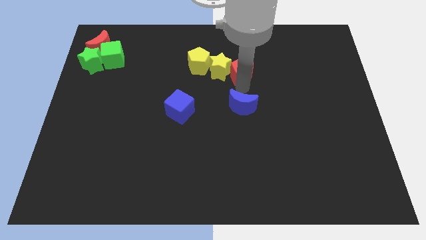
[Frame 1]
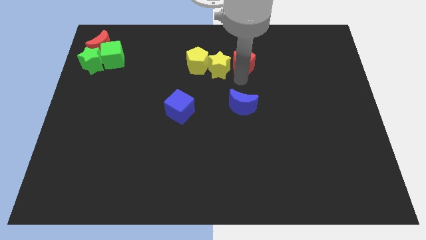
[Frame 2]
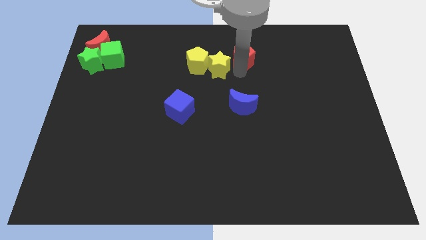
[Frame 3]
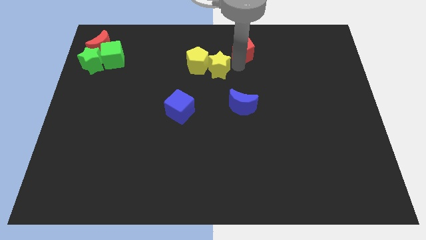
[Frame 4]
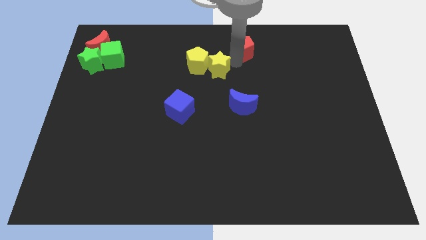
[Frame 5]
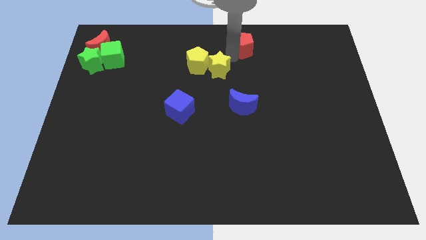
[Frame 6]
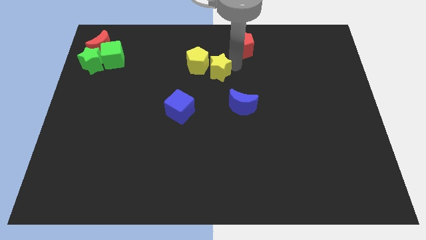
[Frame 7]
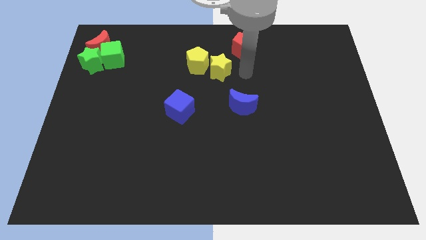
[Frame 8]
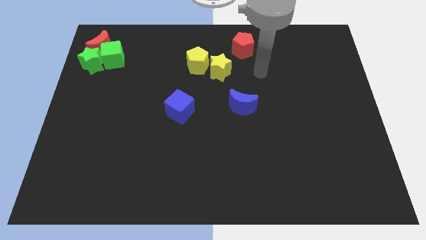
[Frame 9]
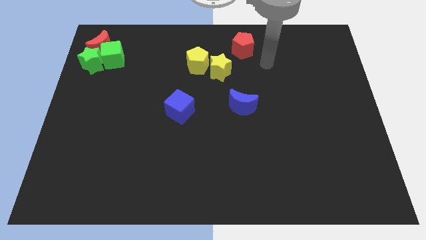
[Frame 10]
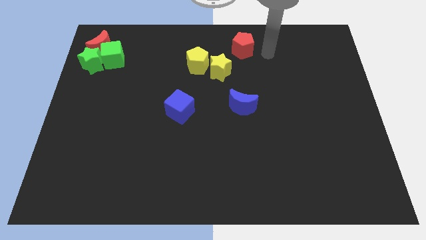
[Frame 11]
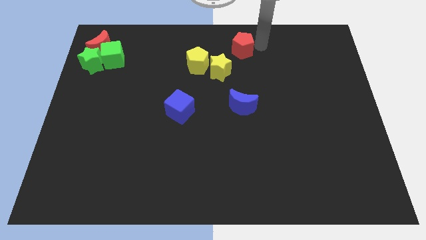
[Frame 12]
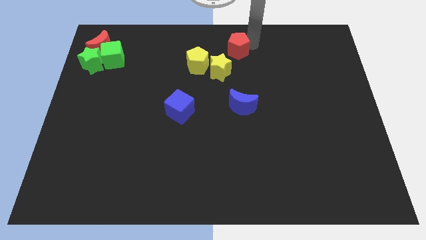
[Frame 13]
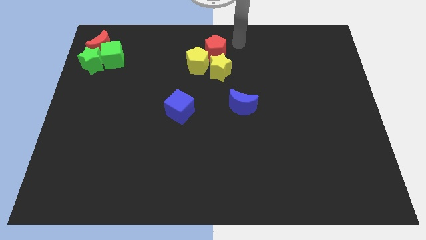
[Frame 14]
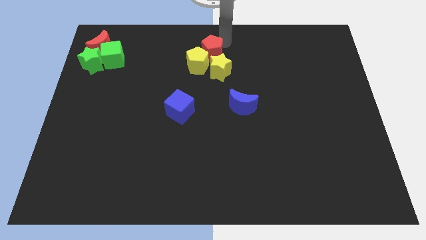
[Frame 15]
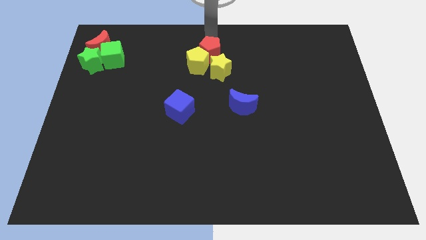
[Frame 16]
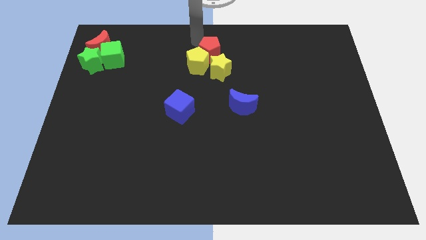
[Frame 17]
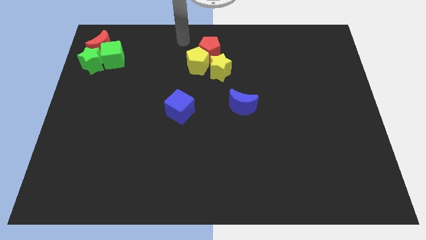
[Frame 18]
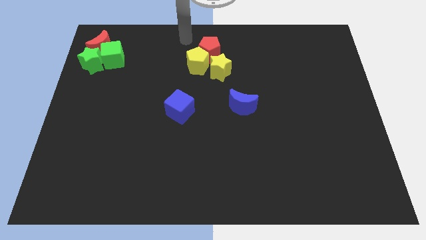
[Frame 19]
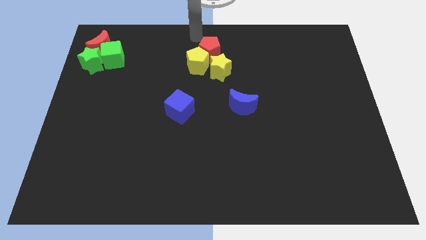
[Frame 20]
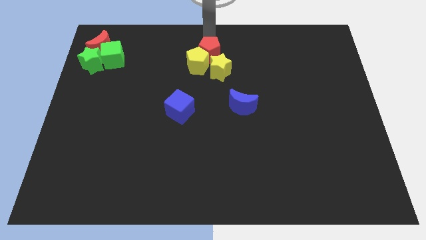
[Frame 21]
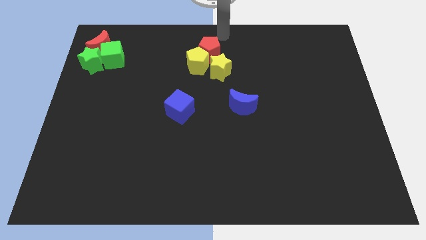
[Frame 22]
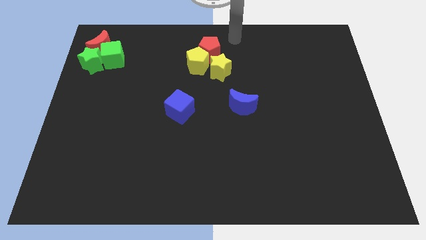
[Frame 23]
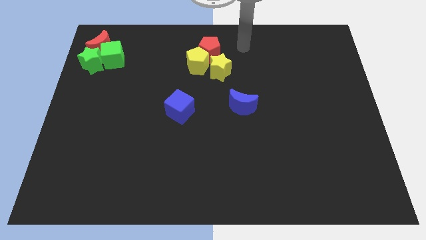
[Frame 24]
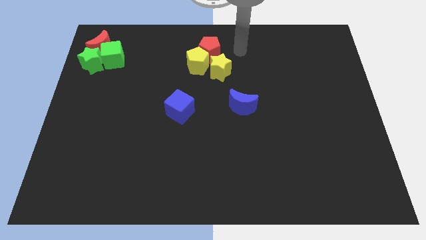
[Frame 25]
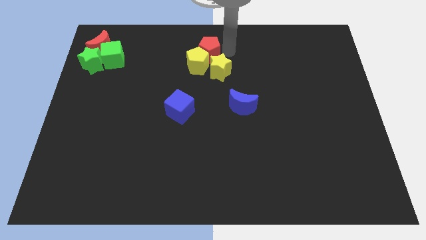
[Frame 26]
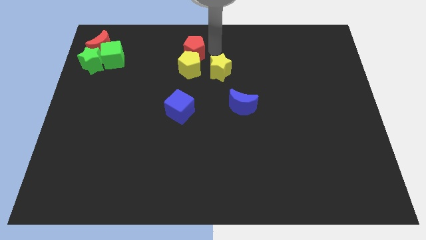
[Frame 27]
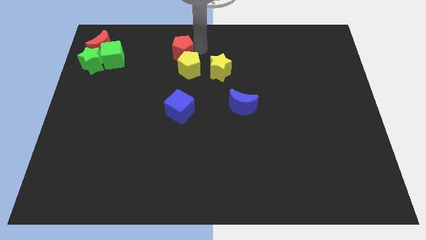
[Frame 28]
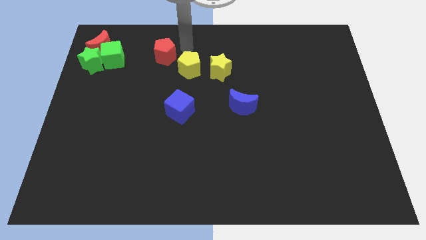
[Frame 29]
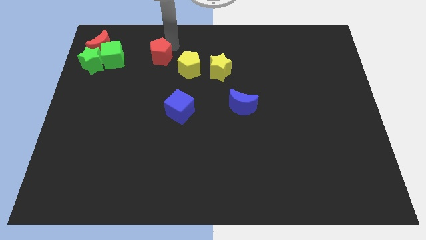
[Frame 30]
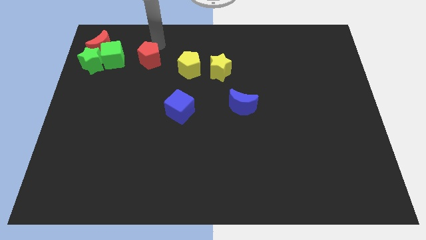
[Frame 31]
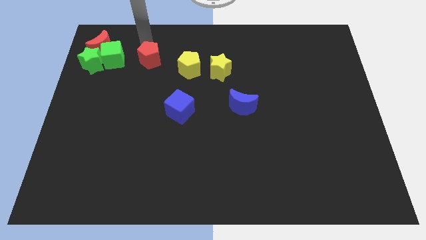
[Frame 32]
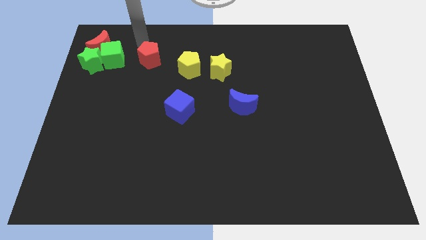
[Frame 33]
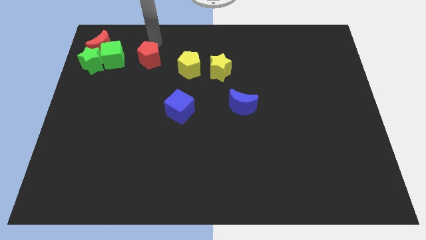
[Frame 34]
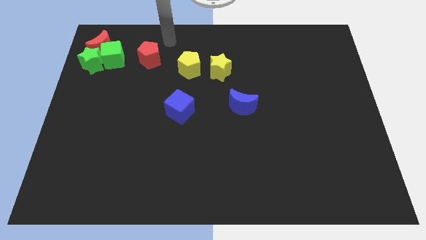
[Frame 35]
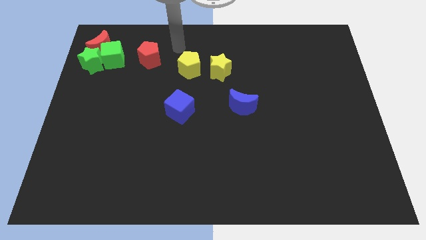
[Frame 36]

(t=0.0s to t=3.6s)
place the red pentagon to the right of green cube

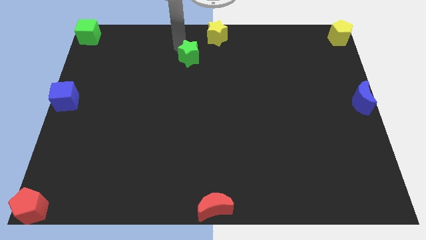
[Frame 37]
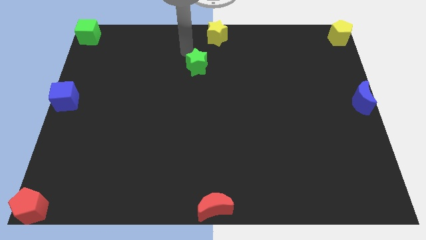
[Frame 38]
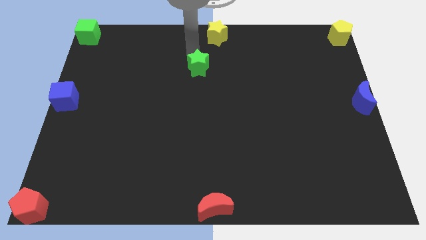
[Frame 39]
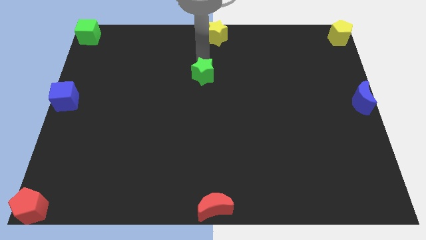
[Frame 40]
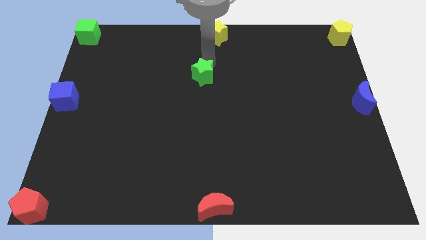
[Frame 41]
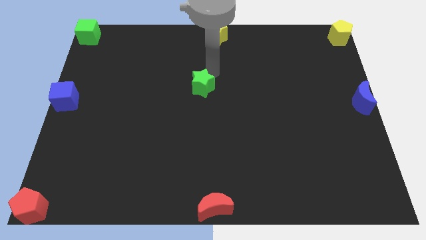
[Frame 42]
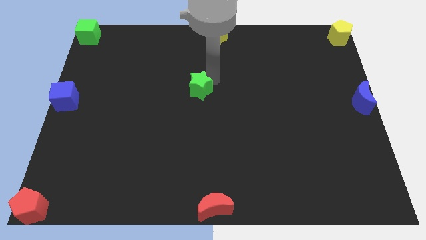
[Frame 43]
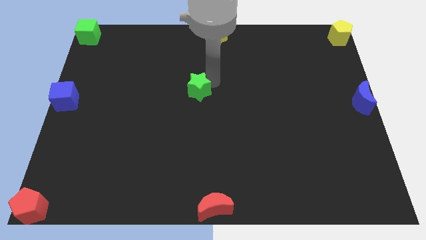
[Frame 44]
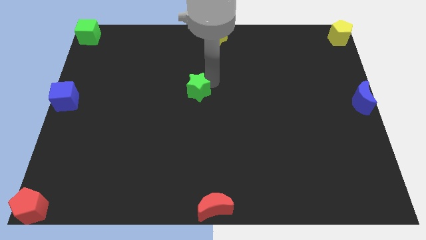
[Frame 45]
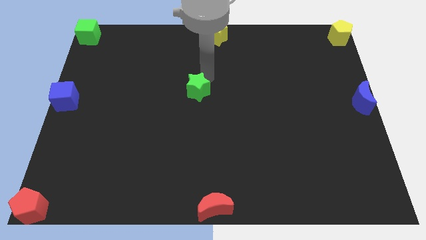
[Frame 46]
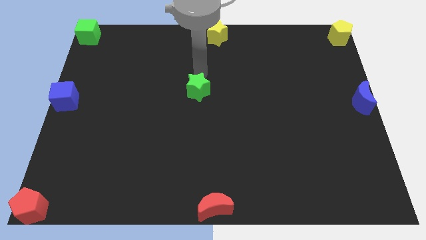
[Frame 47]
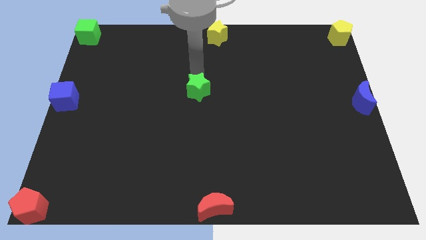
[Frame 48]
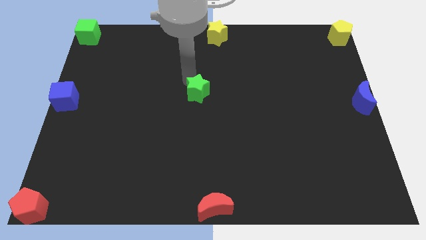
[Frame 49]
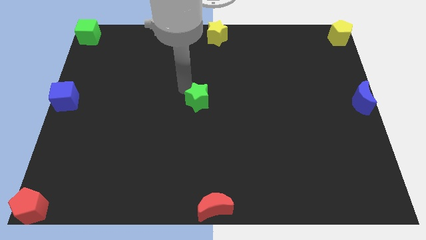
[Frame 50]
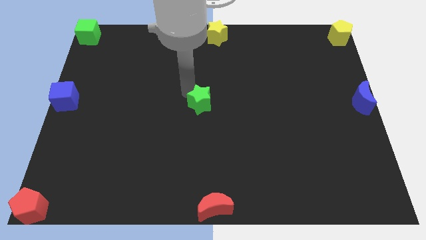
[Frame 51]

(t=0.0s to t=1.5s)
move the green star to the middle

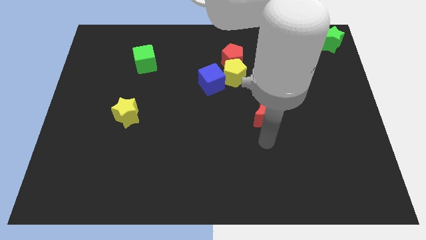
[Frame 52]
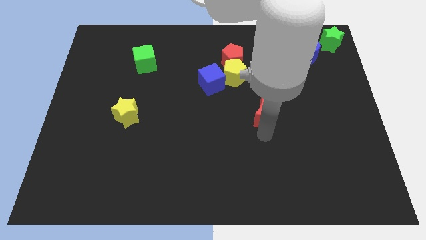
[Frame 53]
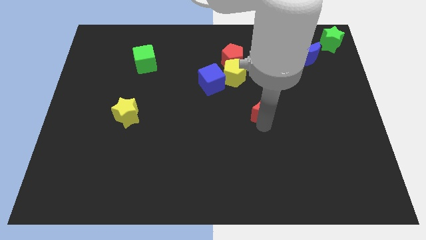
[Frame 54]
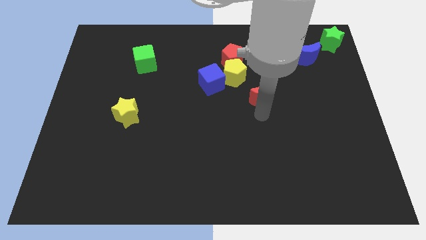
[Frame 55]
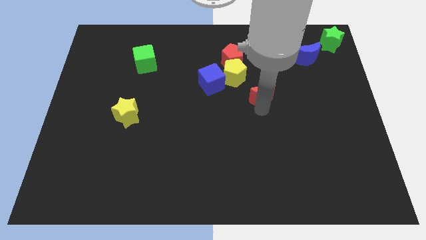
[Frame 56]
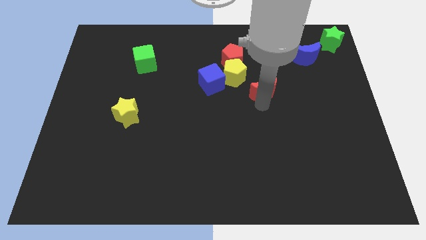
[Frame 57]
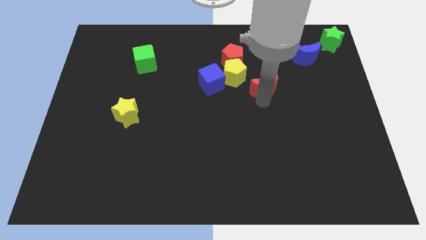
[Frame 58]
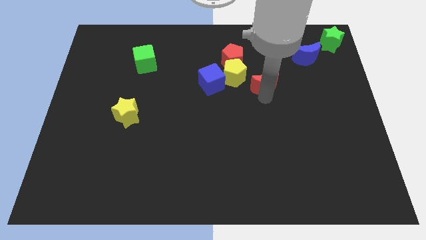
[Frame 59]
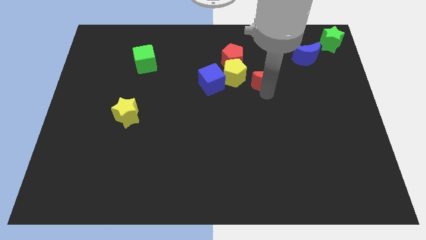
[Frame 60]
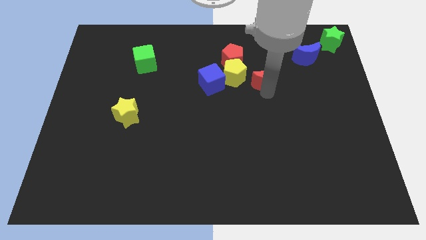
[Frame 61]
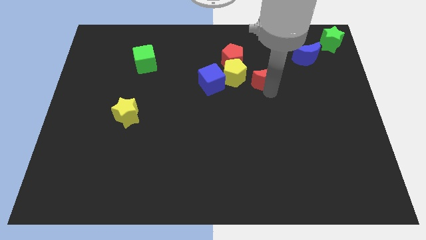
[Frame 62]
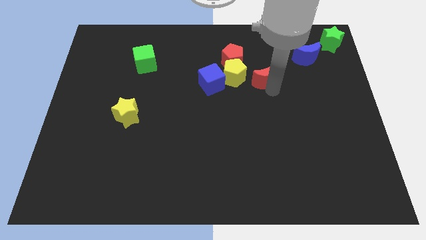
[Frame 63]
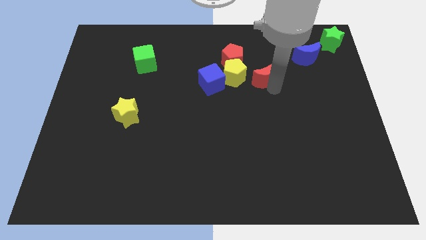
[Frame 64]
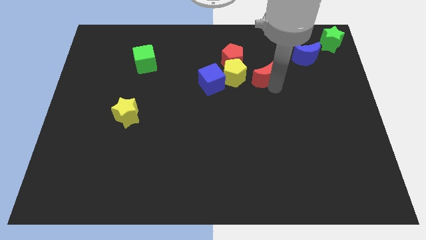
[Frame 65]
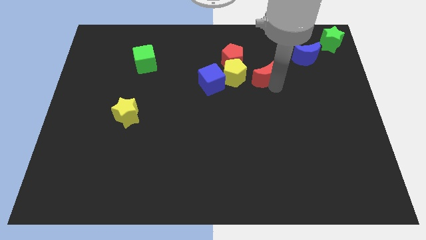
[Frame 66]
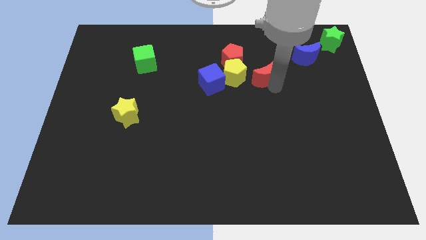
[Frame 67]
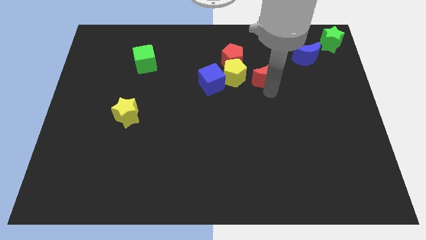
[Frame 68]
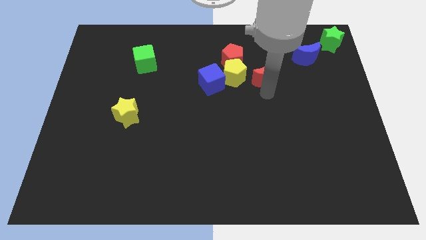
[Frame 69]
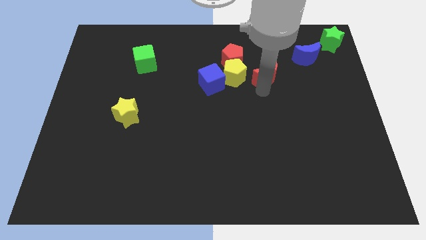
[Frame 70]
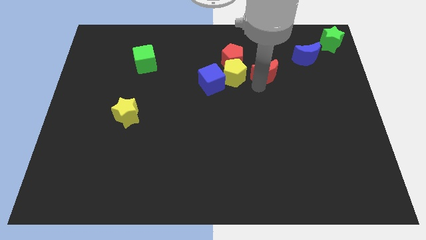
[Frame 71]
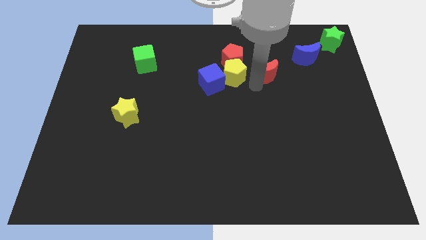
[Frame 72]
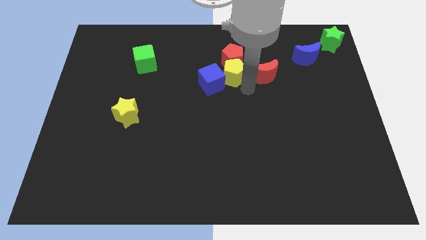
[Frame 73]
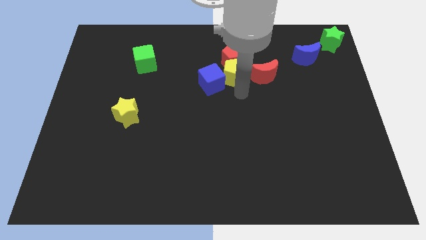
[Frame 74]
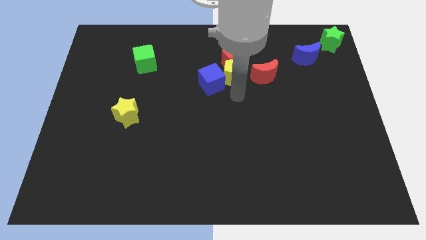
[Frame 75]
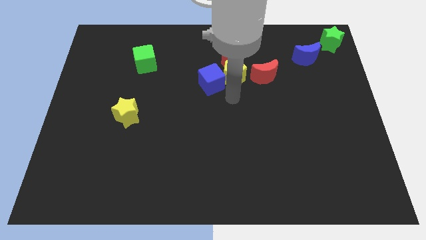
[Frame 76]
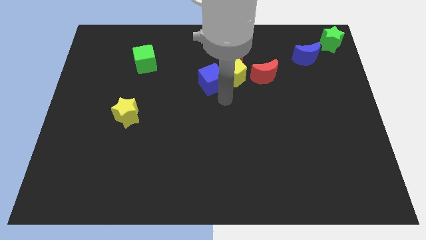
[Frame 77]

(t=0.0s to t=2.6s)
place the red crescent at the right of the yellow pentagon

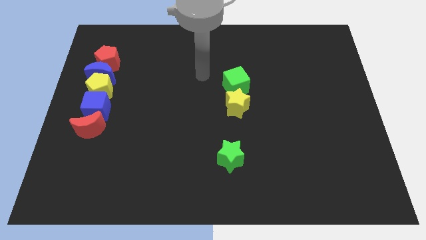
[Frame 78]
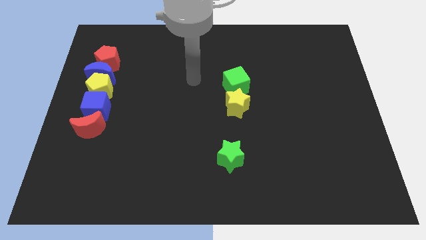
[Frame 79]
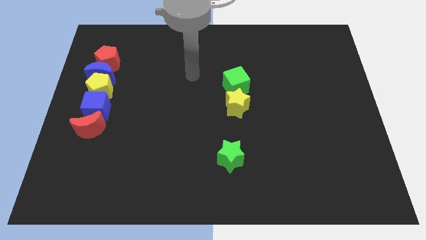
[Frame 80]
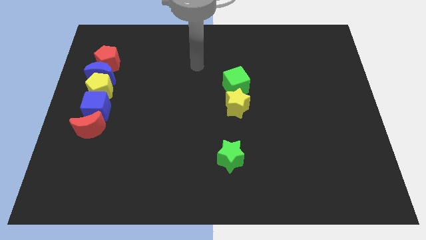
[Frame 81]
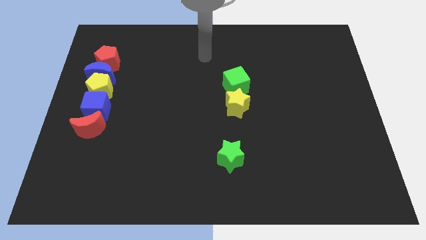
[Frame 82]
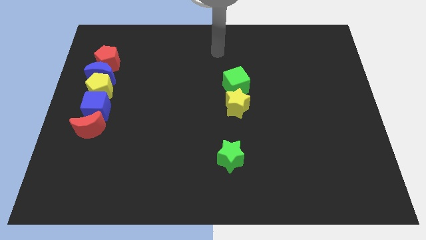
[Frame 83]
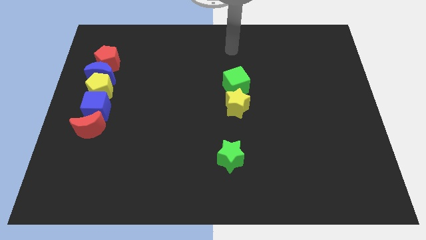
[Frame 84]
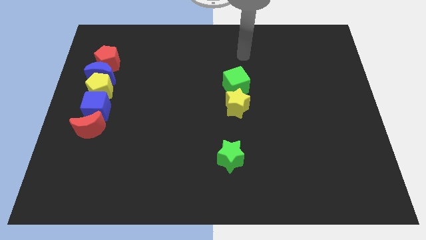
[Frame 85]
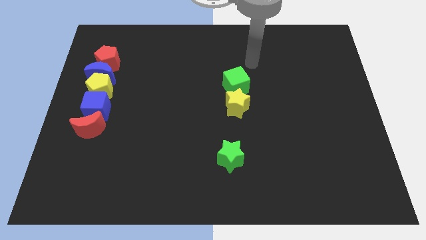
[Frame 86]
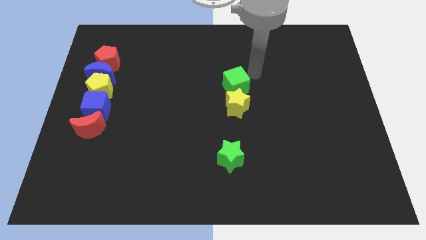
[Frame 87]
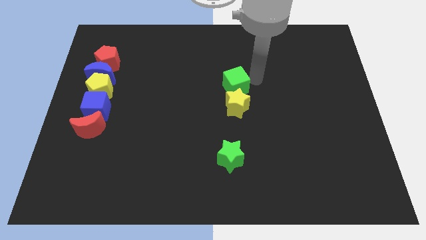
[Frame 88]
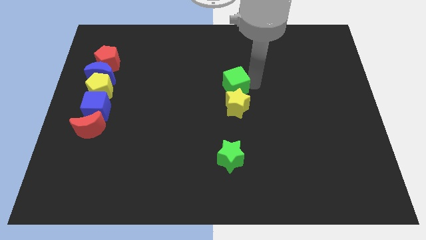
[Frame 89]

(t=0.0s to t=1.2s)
move your arm to the right of the green cube

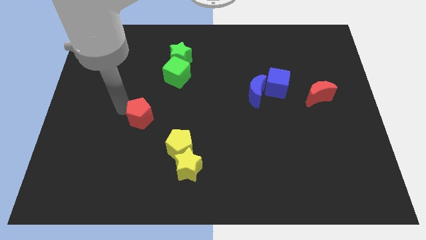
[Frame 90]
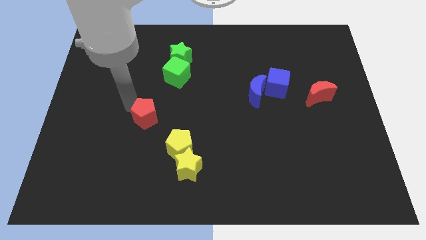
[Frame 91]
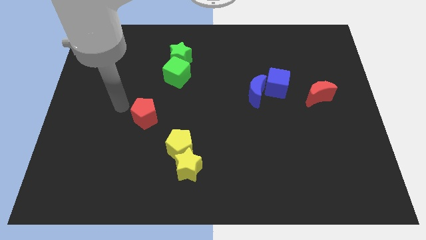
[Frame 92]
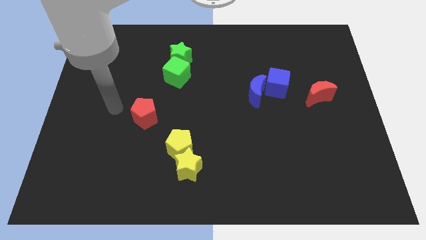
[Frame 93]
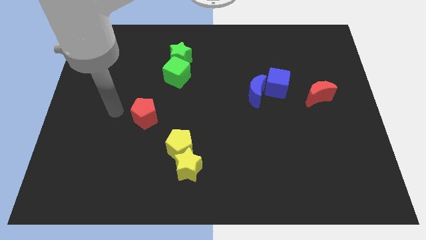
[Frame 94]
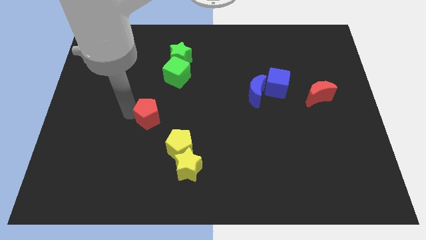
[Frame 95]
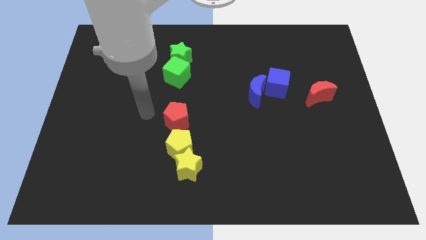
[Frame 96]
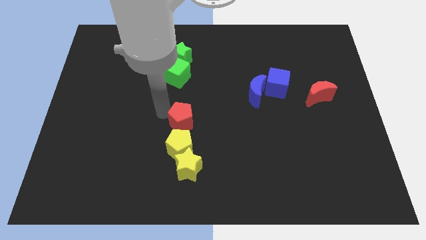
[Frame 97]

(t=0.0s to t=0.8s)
place red pentagon to the top of yellow pentagon
